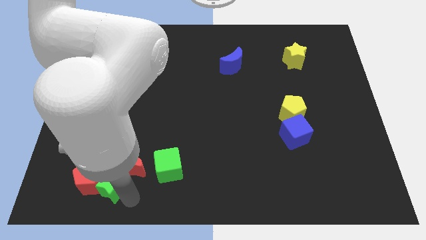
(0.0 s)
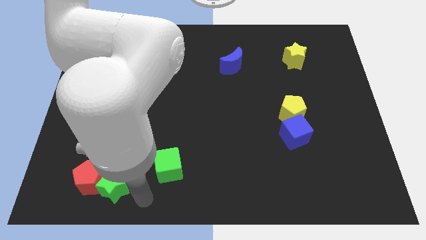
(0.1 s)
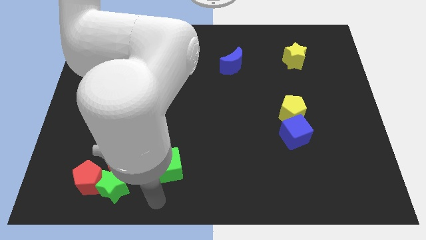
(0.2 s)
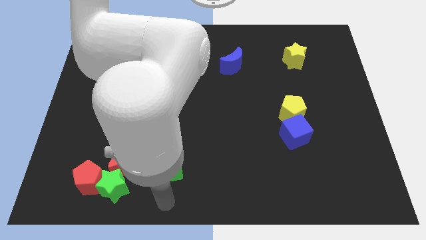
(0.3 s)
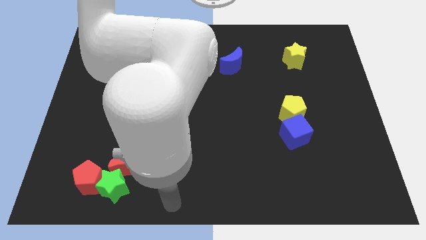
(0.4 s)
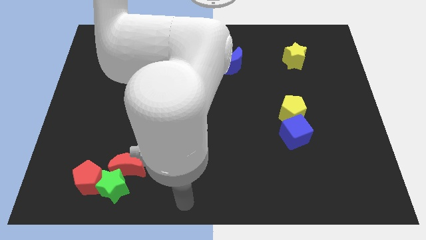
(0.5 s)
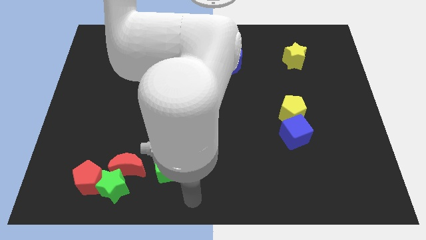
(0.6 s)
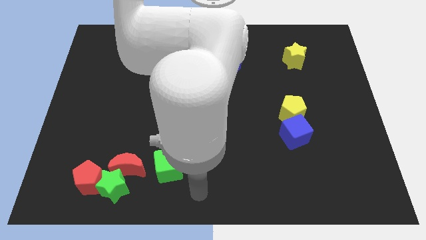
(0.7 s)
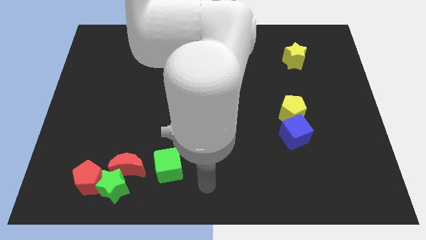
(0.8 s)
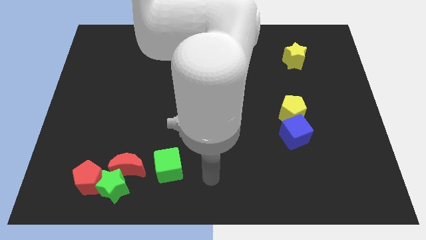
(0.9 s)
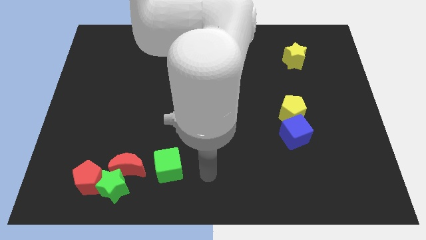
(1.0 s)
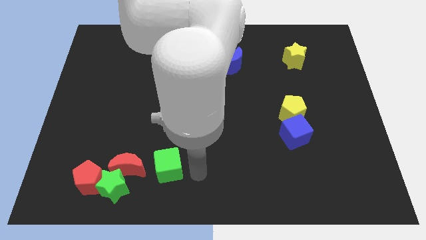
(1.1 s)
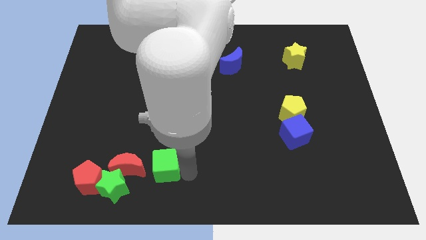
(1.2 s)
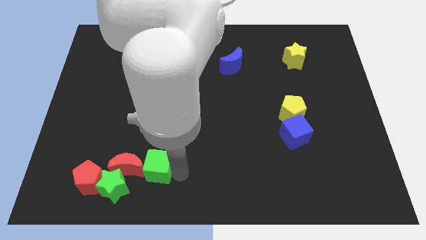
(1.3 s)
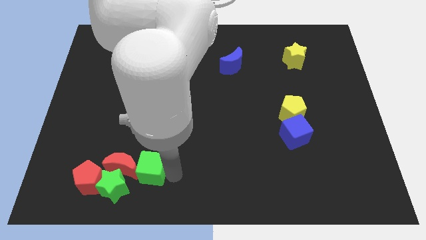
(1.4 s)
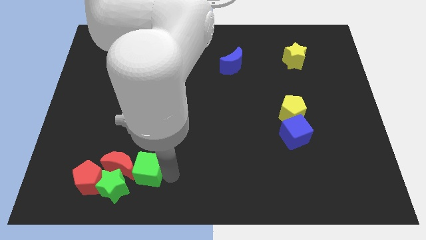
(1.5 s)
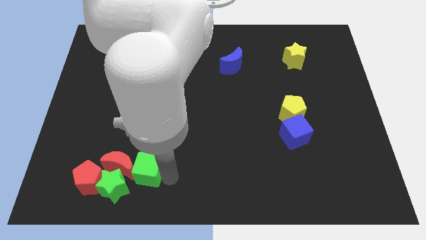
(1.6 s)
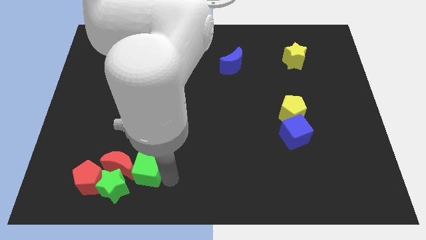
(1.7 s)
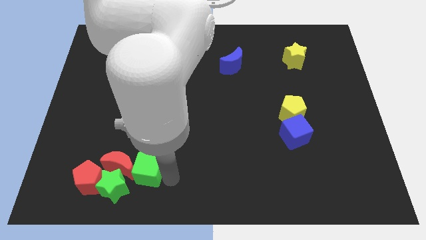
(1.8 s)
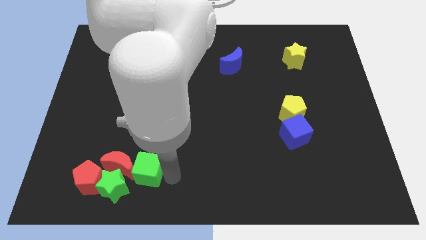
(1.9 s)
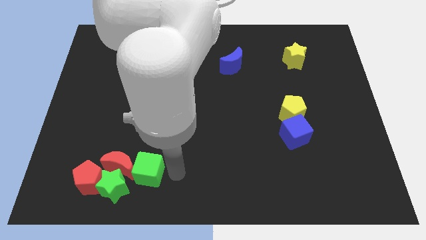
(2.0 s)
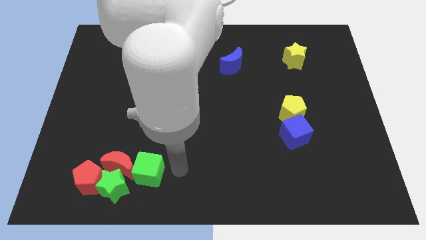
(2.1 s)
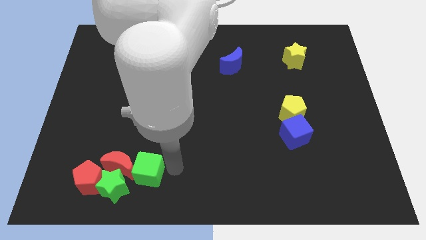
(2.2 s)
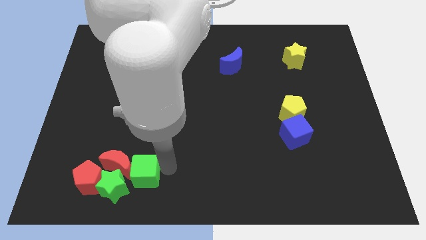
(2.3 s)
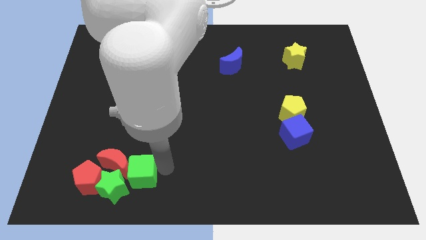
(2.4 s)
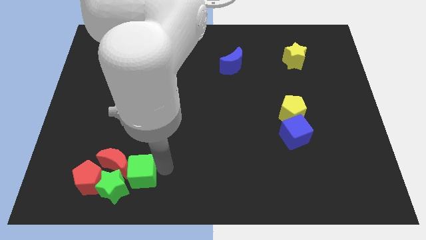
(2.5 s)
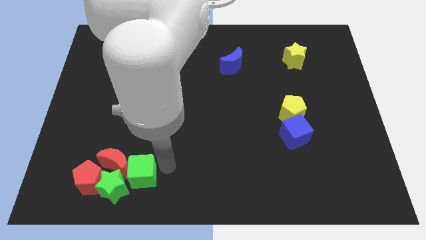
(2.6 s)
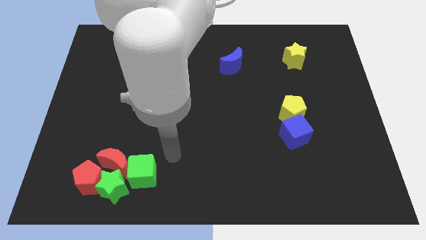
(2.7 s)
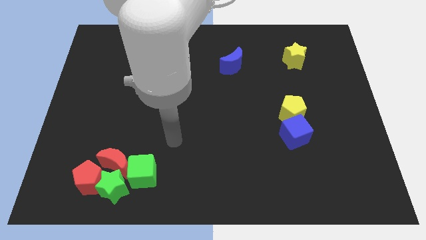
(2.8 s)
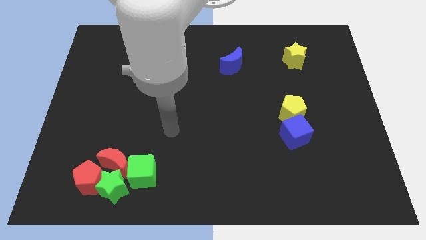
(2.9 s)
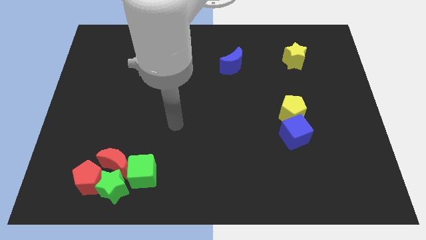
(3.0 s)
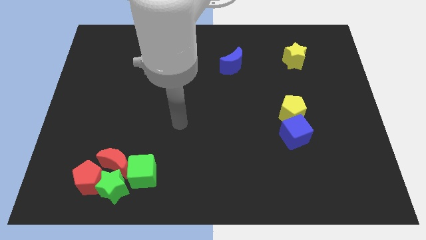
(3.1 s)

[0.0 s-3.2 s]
move the green cube into the red moon

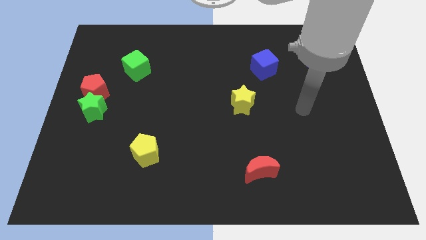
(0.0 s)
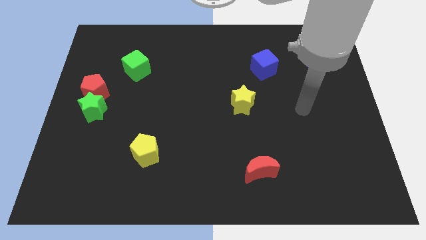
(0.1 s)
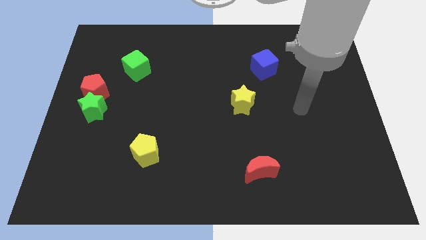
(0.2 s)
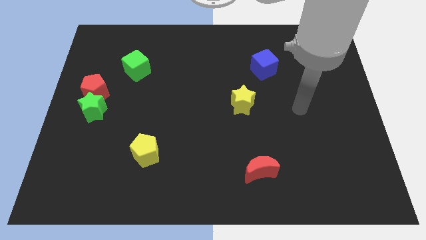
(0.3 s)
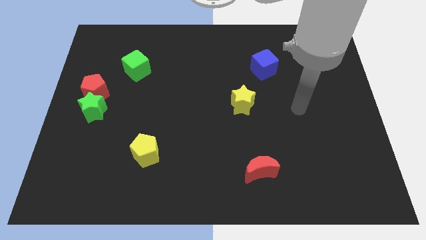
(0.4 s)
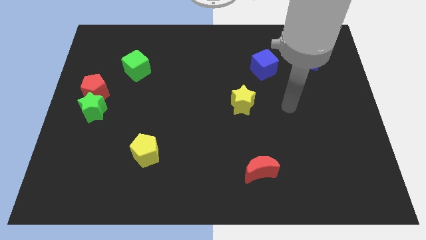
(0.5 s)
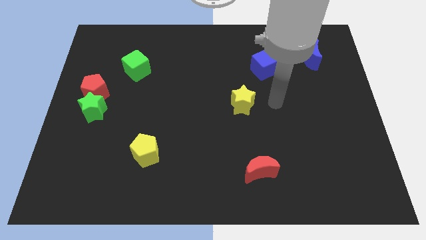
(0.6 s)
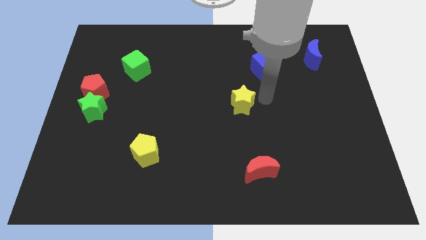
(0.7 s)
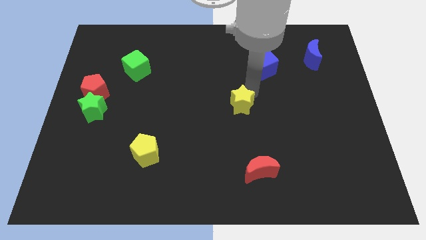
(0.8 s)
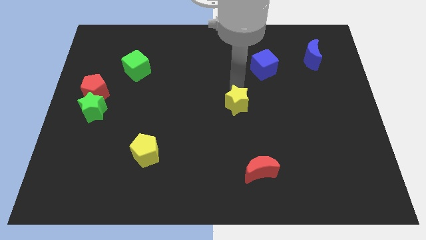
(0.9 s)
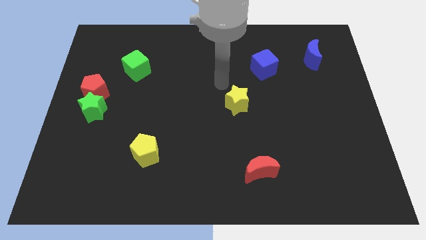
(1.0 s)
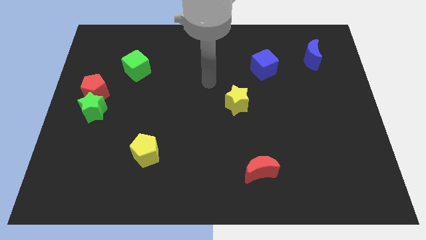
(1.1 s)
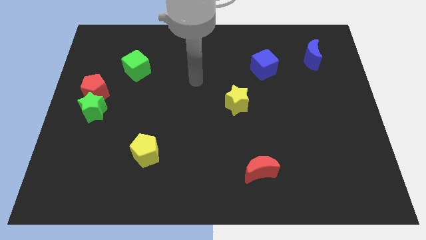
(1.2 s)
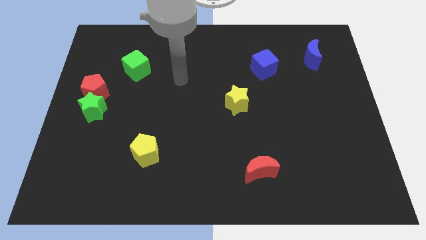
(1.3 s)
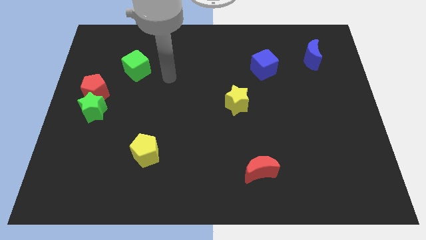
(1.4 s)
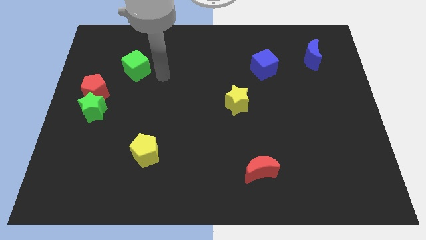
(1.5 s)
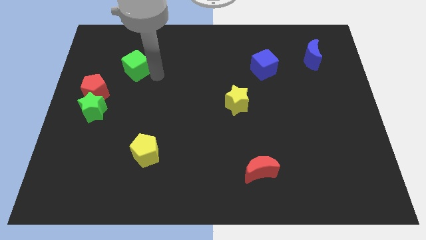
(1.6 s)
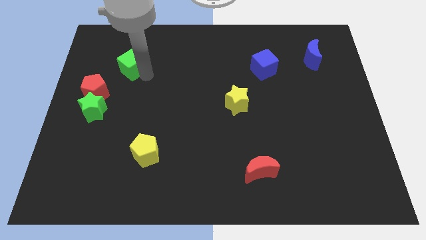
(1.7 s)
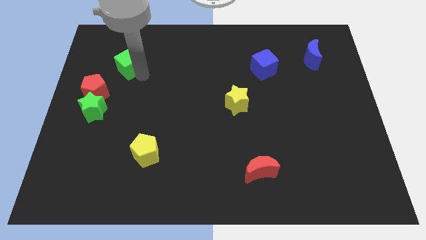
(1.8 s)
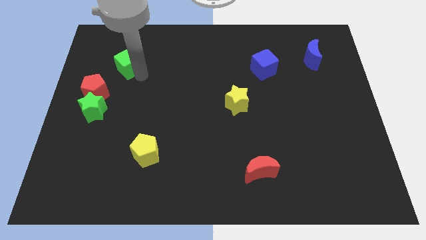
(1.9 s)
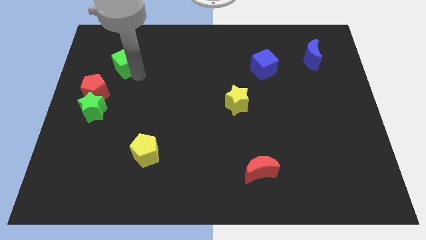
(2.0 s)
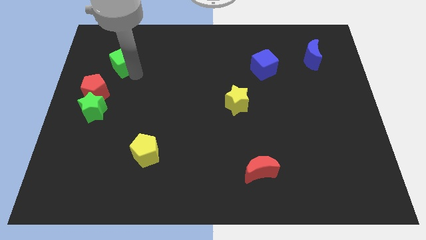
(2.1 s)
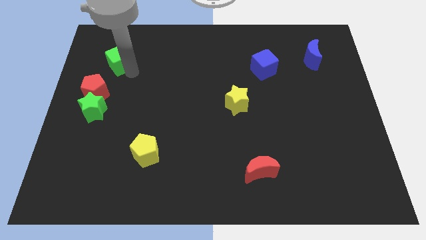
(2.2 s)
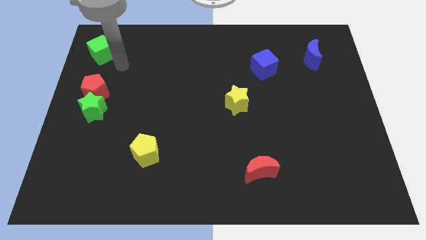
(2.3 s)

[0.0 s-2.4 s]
place the green cube above the red pentagon

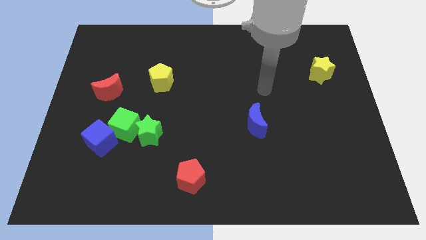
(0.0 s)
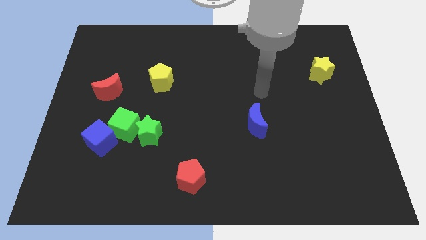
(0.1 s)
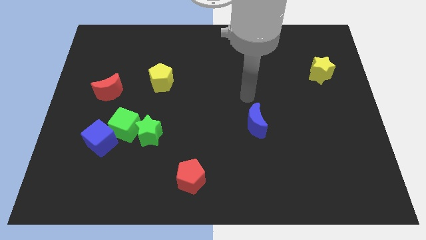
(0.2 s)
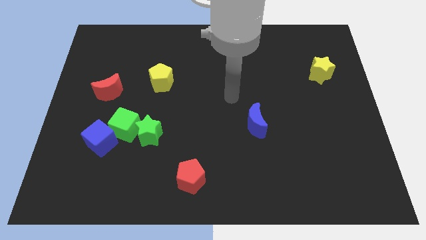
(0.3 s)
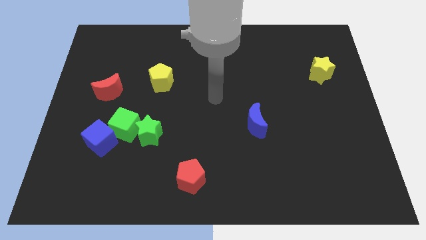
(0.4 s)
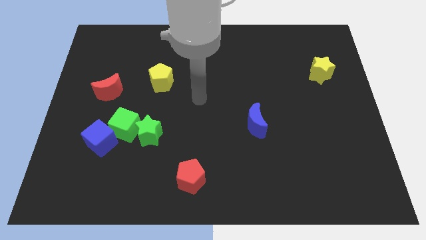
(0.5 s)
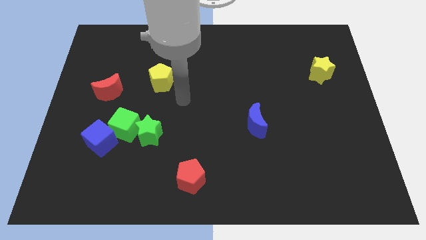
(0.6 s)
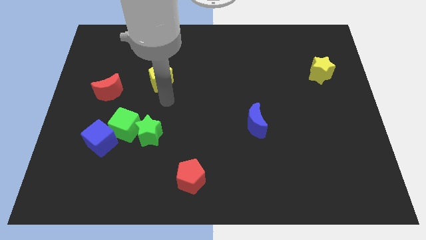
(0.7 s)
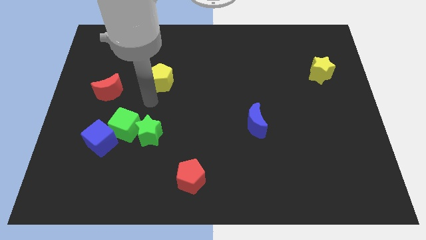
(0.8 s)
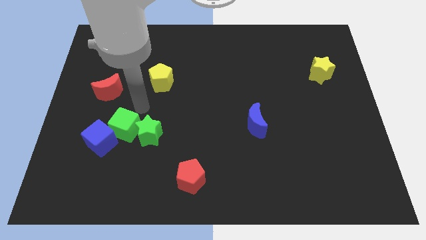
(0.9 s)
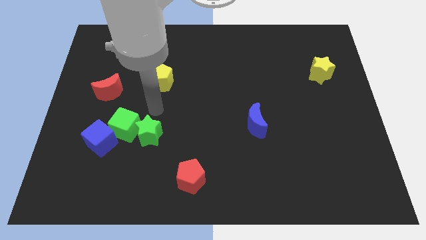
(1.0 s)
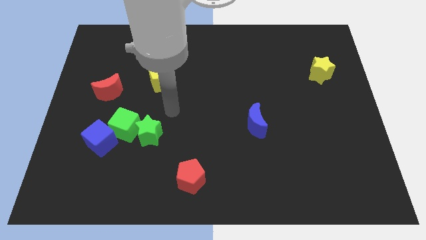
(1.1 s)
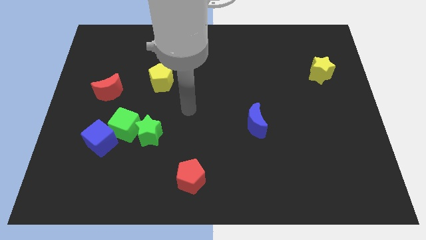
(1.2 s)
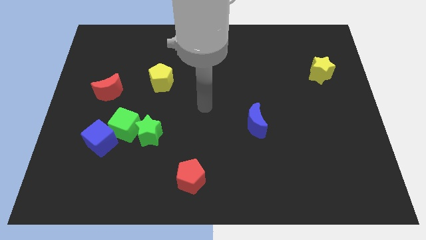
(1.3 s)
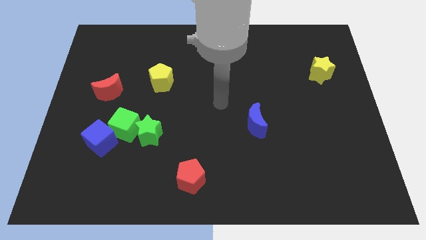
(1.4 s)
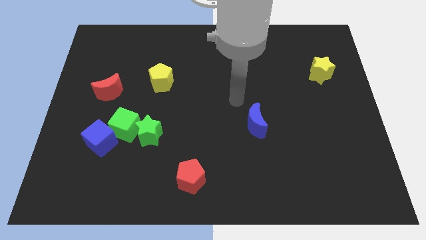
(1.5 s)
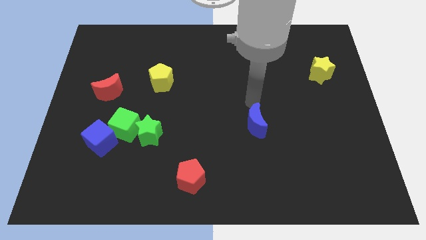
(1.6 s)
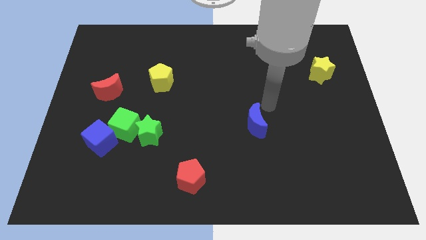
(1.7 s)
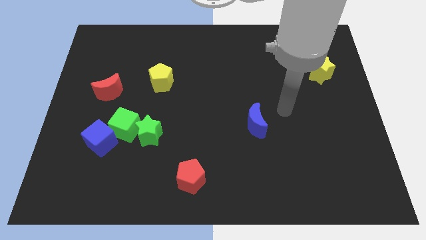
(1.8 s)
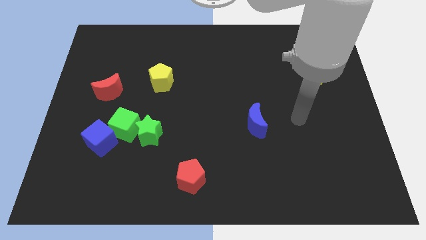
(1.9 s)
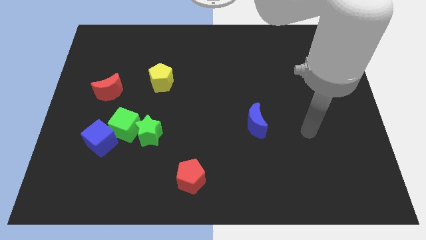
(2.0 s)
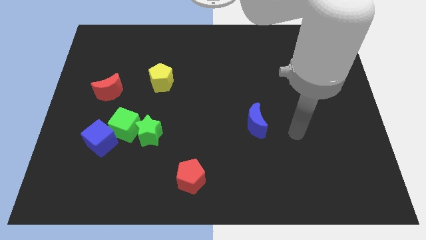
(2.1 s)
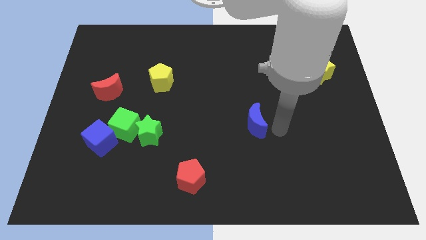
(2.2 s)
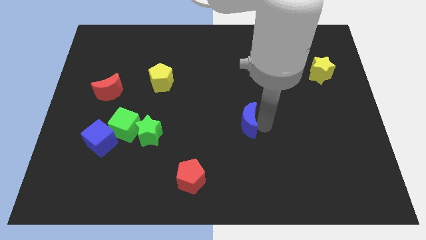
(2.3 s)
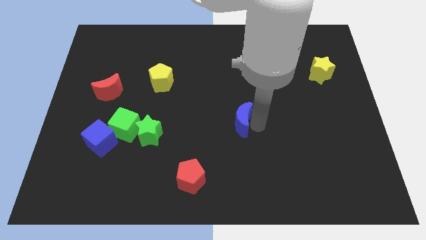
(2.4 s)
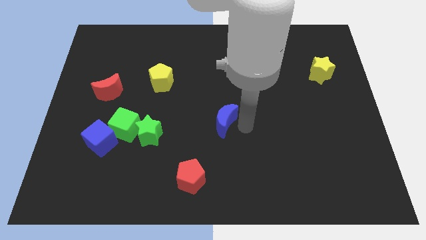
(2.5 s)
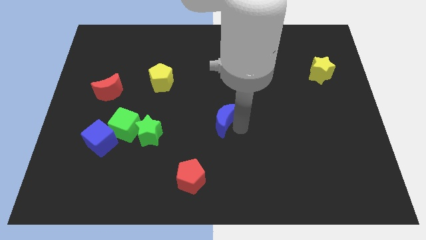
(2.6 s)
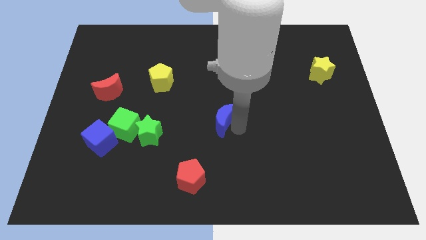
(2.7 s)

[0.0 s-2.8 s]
push the blue crescent to the center of the board

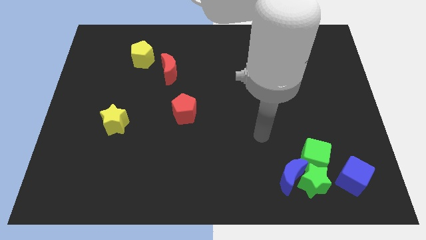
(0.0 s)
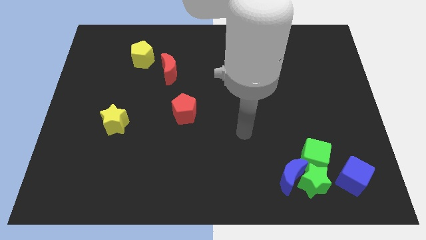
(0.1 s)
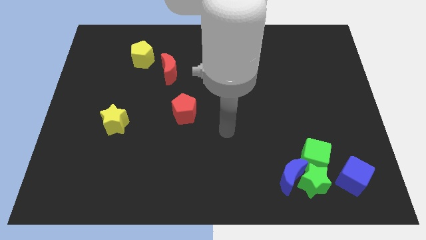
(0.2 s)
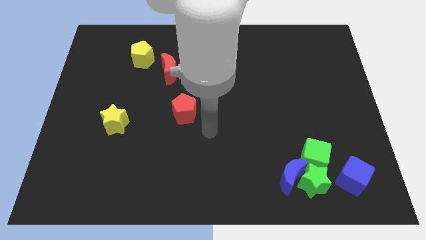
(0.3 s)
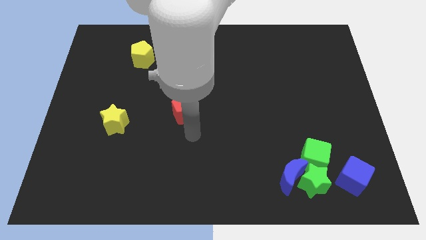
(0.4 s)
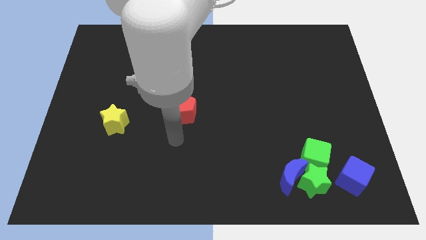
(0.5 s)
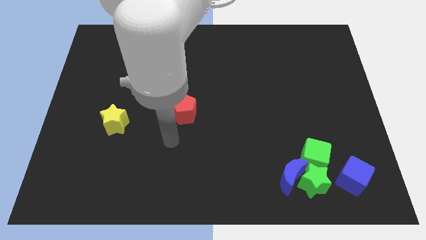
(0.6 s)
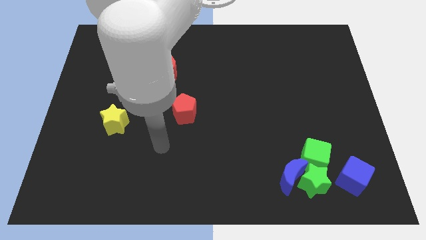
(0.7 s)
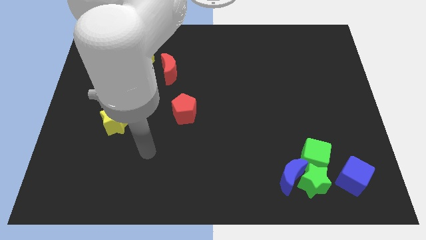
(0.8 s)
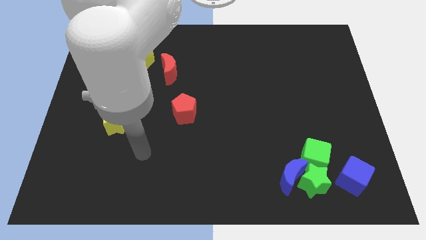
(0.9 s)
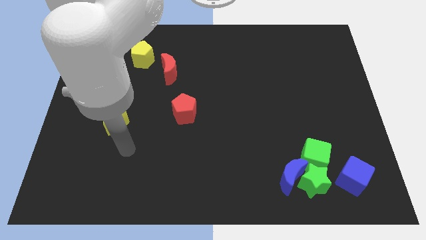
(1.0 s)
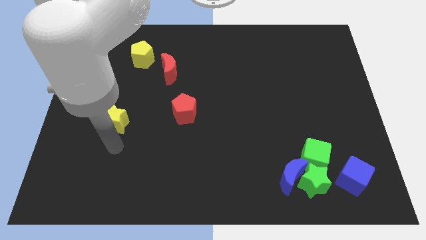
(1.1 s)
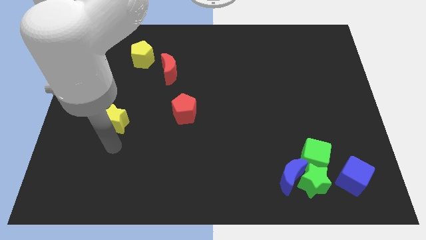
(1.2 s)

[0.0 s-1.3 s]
go and place your hand below the yellow pentagon
